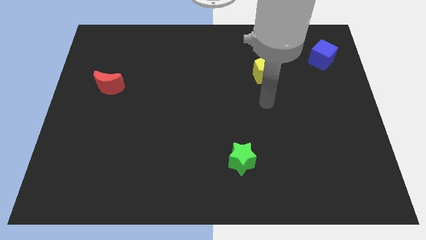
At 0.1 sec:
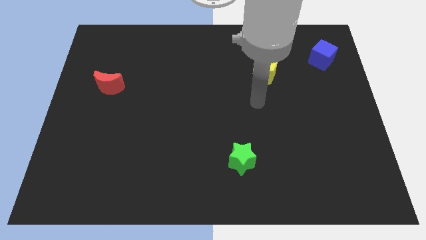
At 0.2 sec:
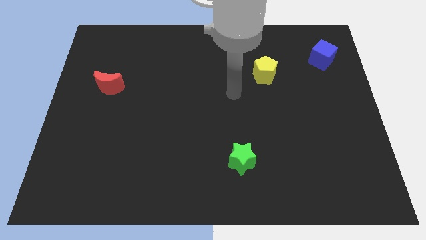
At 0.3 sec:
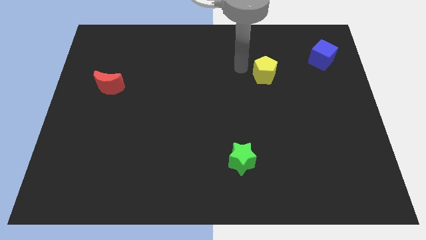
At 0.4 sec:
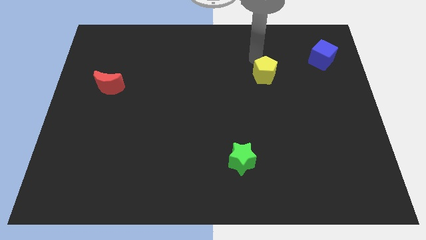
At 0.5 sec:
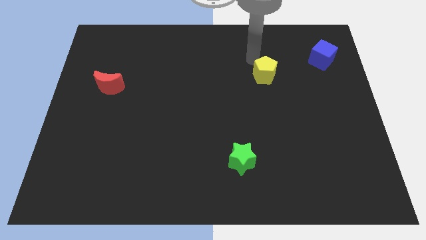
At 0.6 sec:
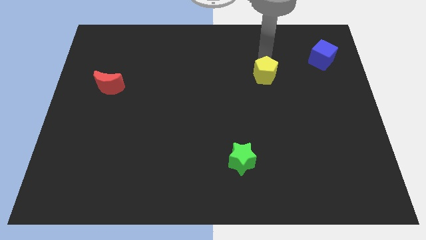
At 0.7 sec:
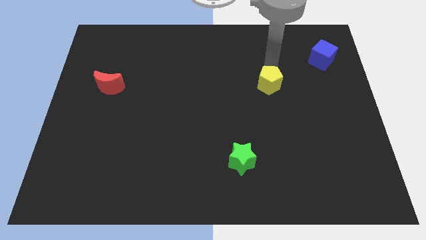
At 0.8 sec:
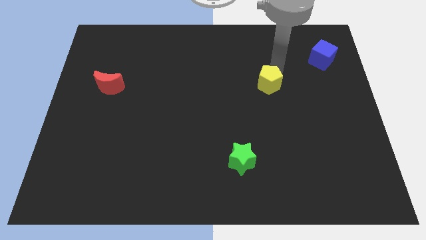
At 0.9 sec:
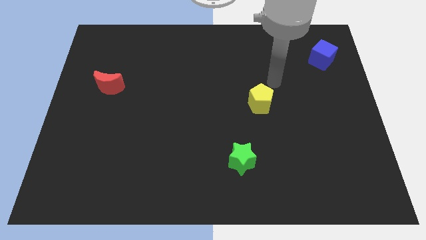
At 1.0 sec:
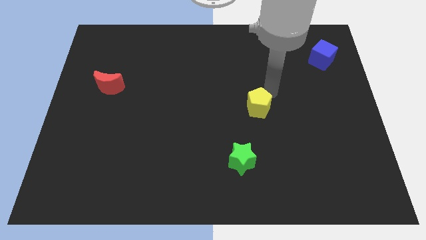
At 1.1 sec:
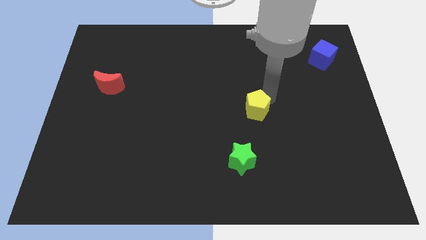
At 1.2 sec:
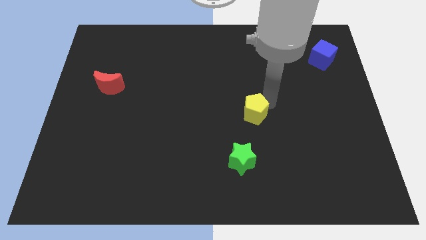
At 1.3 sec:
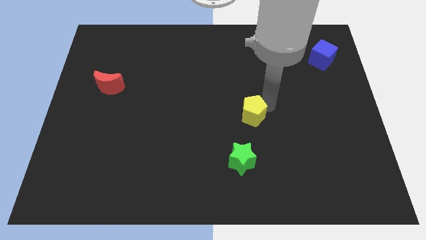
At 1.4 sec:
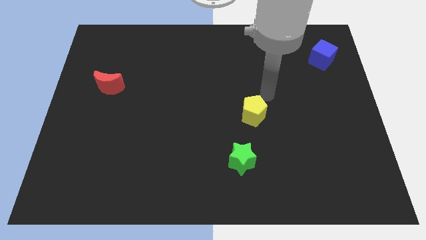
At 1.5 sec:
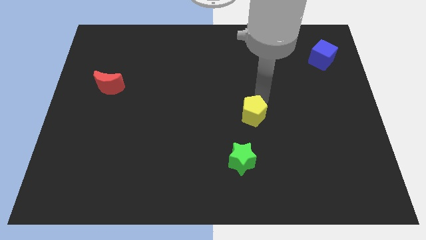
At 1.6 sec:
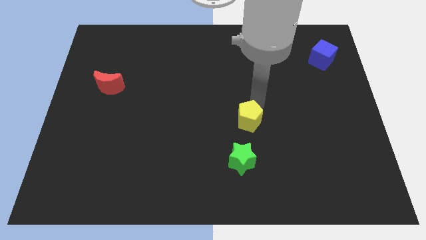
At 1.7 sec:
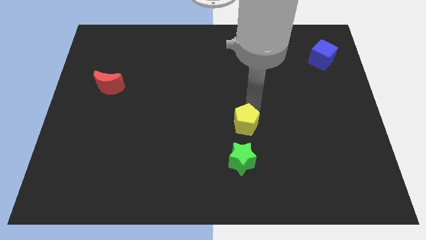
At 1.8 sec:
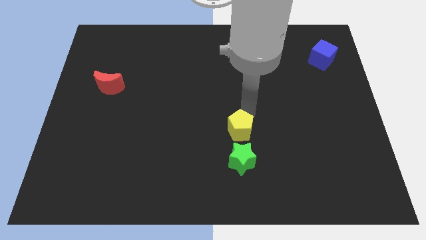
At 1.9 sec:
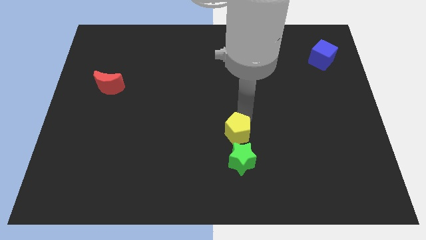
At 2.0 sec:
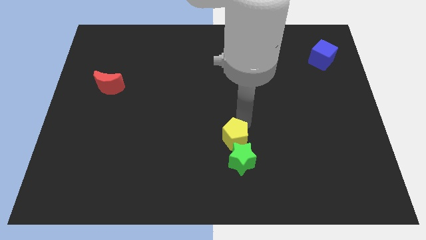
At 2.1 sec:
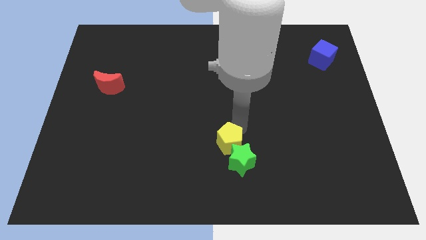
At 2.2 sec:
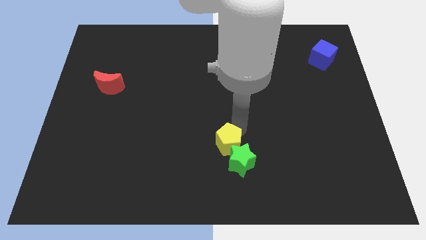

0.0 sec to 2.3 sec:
put the yellow pentagon close to the green block

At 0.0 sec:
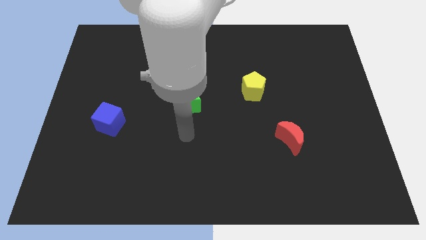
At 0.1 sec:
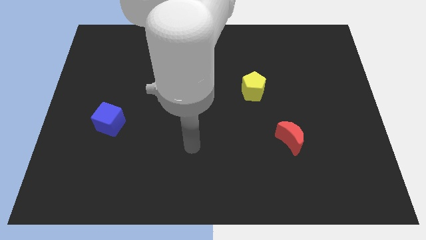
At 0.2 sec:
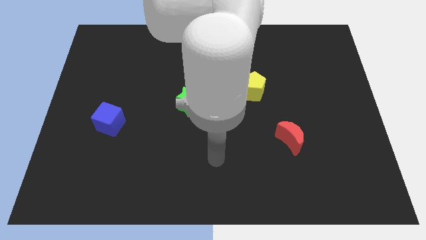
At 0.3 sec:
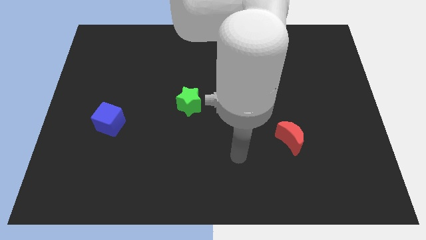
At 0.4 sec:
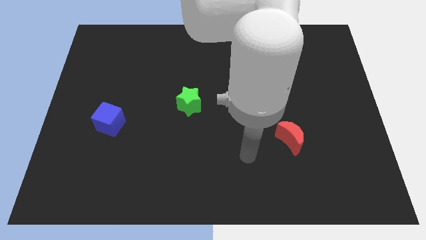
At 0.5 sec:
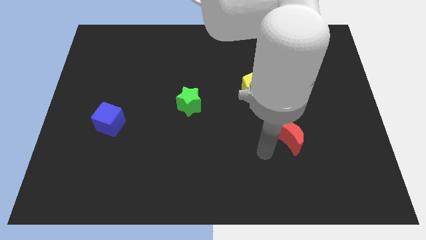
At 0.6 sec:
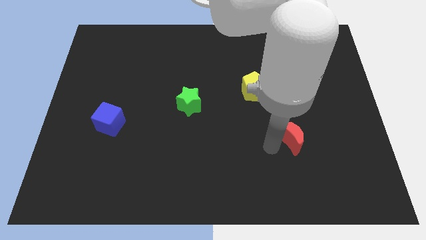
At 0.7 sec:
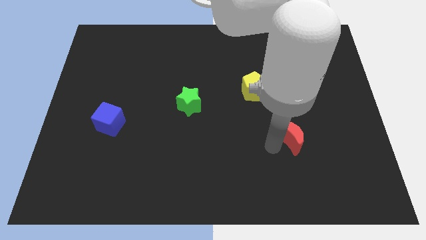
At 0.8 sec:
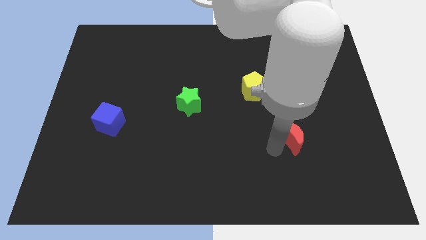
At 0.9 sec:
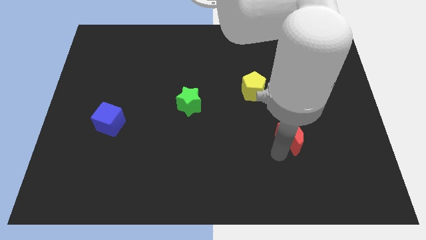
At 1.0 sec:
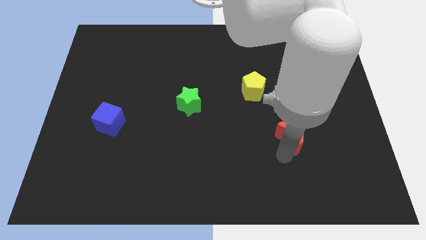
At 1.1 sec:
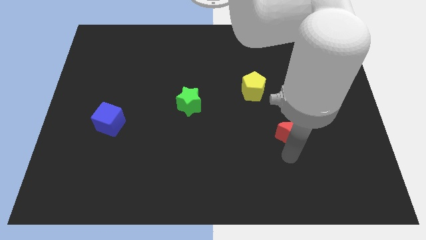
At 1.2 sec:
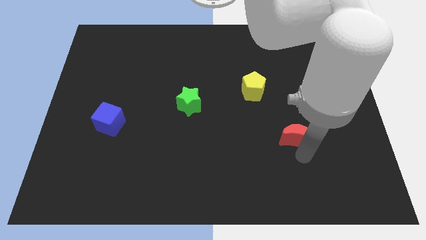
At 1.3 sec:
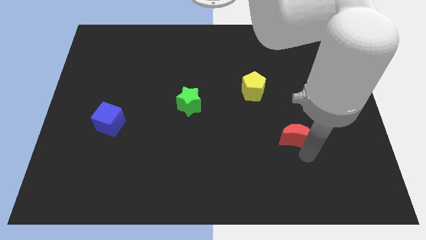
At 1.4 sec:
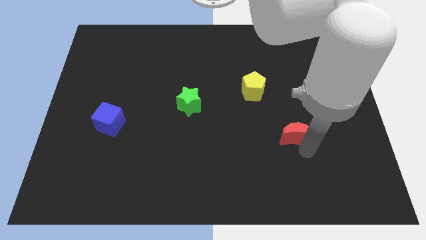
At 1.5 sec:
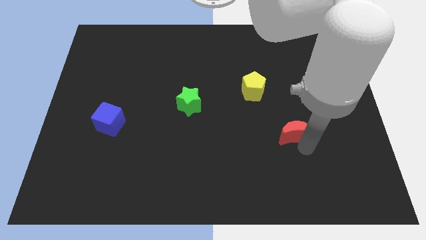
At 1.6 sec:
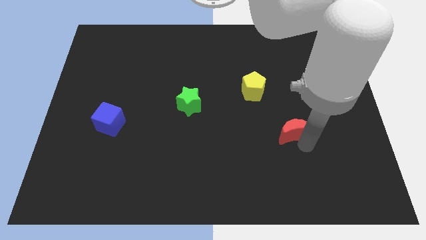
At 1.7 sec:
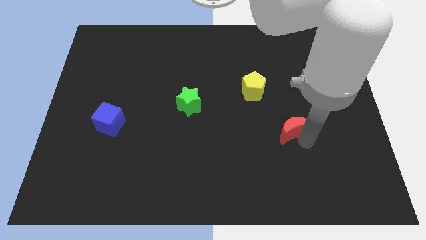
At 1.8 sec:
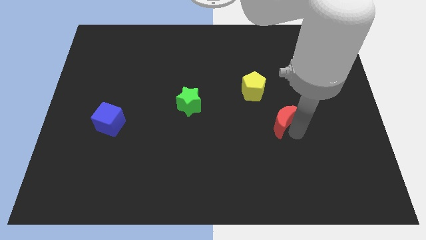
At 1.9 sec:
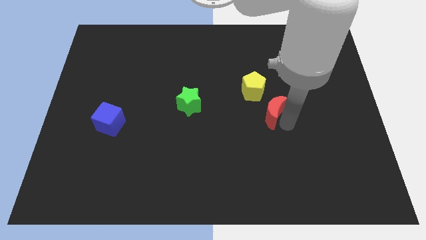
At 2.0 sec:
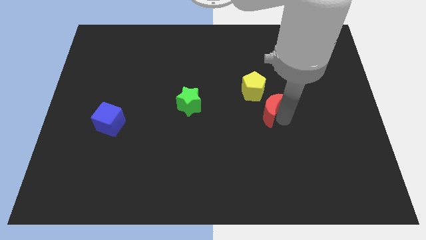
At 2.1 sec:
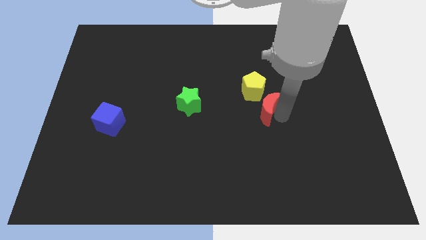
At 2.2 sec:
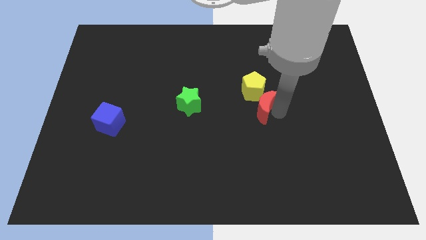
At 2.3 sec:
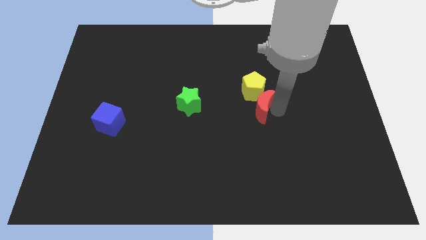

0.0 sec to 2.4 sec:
slide the red block close to the pentagon

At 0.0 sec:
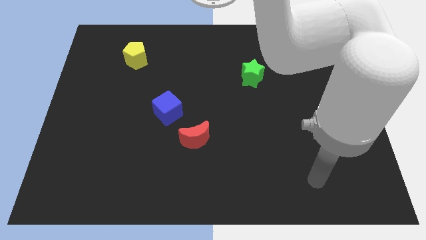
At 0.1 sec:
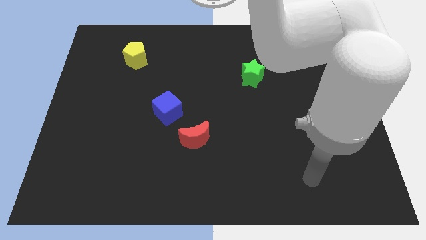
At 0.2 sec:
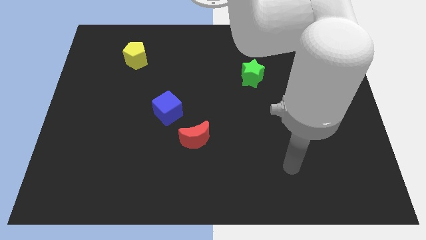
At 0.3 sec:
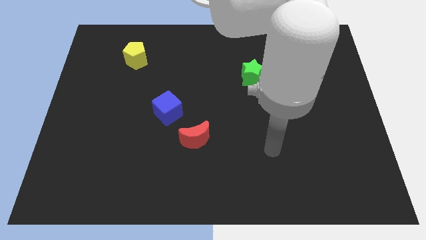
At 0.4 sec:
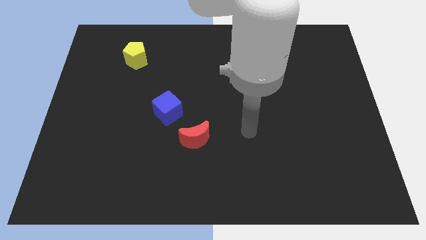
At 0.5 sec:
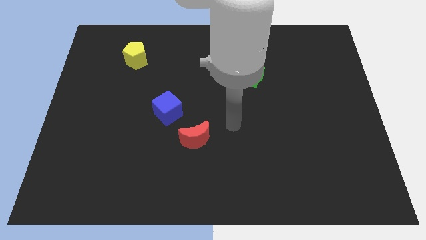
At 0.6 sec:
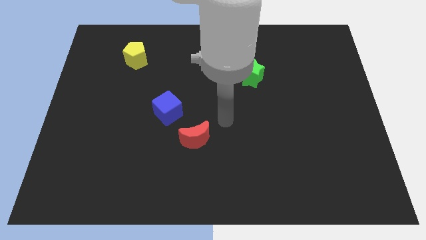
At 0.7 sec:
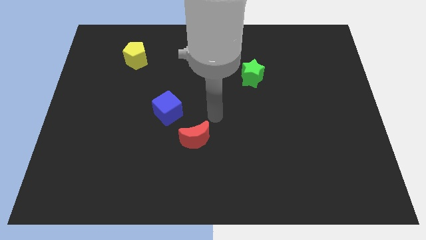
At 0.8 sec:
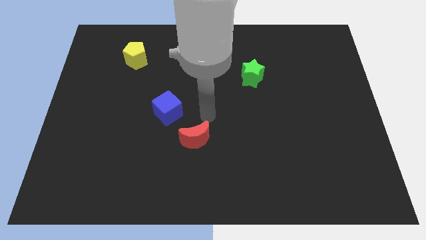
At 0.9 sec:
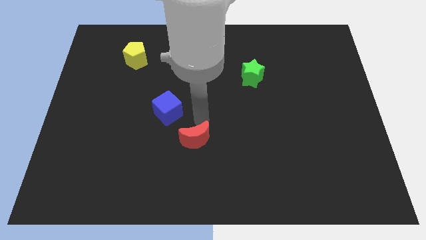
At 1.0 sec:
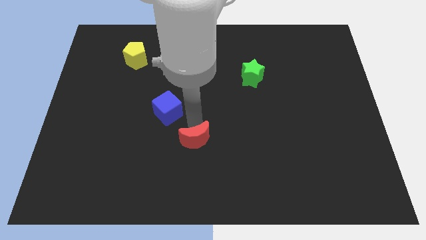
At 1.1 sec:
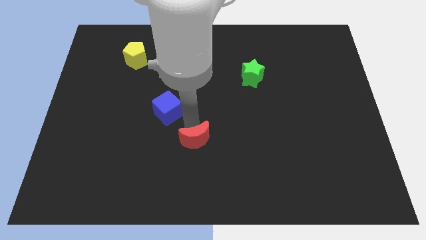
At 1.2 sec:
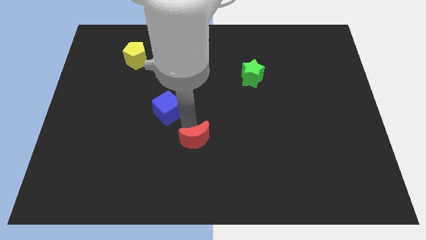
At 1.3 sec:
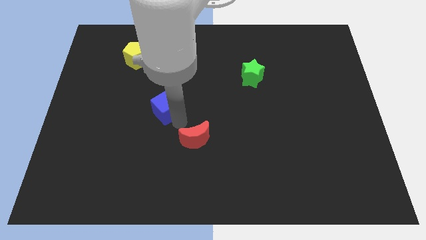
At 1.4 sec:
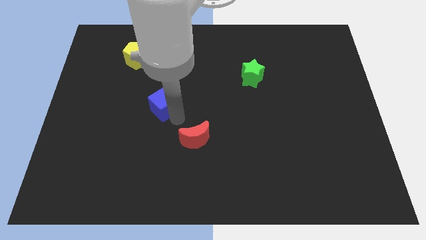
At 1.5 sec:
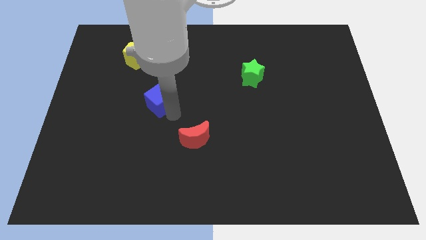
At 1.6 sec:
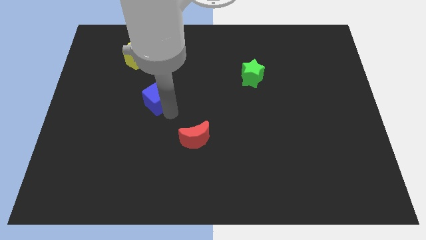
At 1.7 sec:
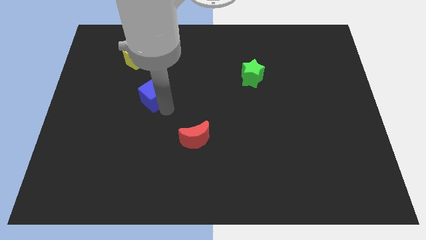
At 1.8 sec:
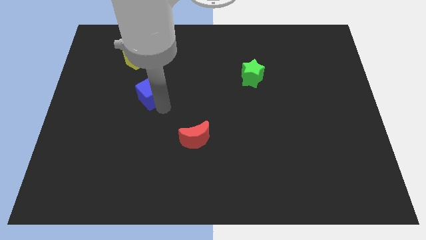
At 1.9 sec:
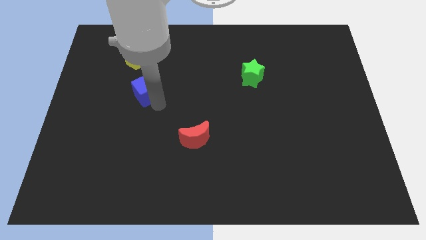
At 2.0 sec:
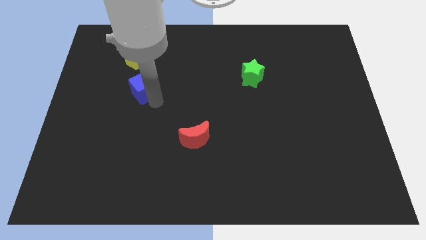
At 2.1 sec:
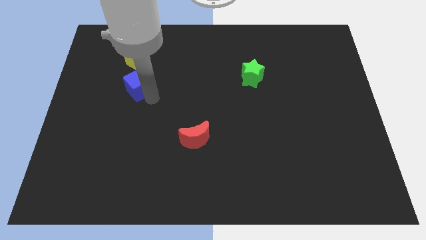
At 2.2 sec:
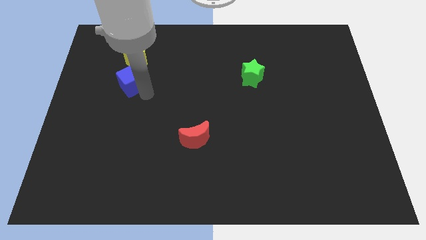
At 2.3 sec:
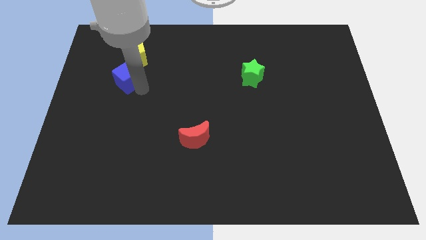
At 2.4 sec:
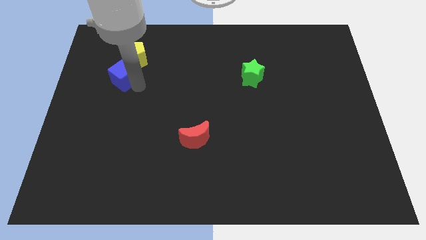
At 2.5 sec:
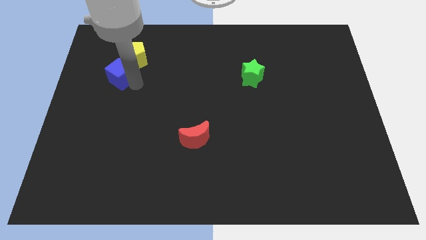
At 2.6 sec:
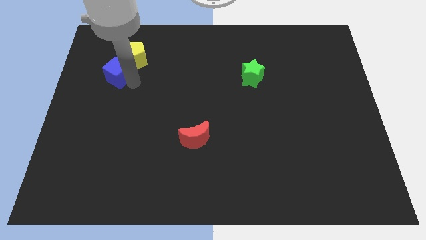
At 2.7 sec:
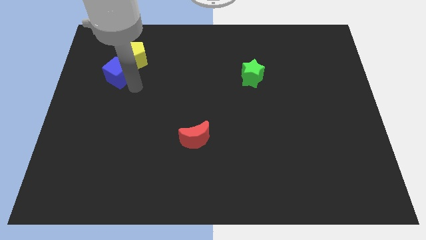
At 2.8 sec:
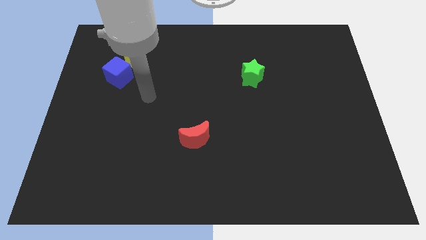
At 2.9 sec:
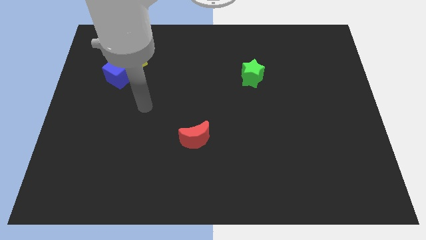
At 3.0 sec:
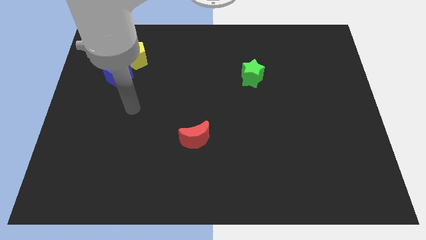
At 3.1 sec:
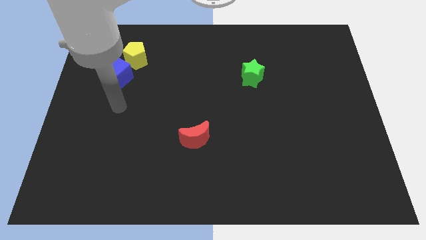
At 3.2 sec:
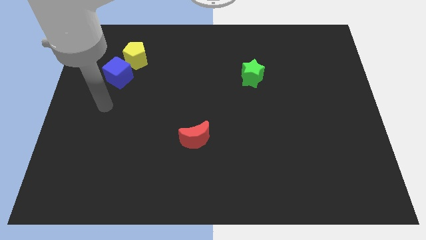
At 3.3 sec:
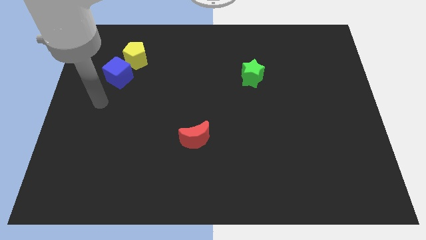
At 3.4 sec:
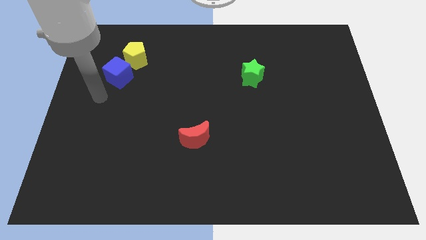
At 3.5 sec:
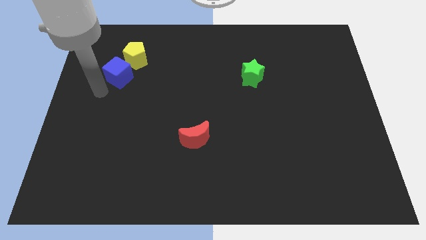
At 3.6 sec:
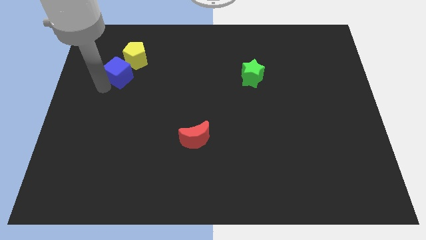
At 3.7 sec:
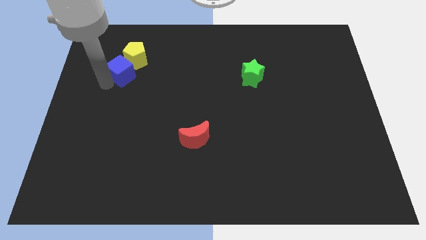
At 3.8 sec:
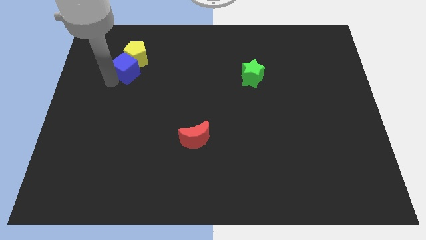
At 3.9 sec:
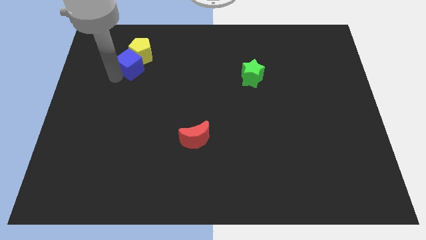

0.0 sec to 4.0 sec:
slide the blue cube next to the pentagon
